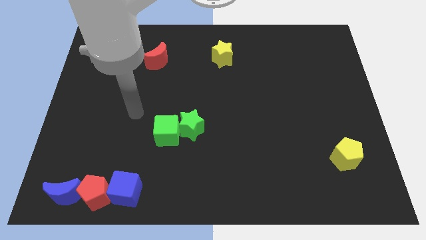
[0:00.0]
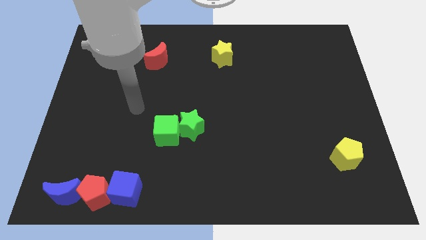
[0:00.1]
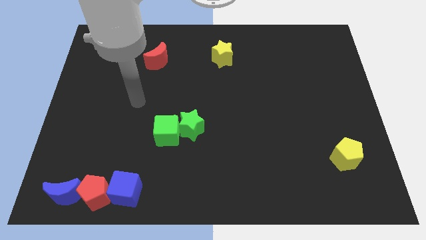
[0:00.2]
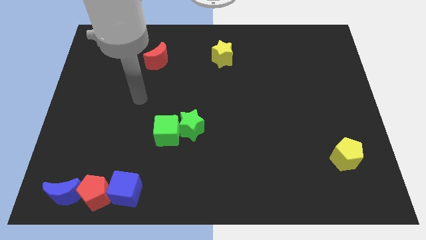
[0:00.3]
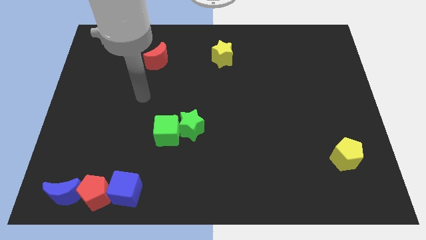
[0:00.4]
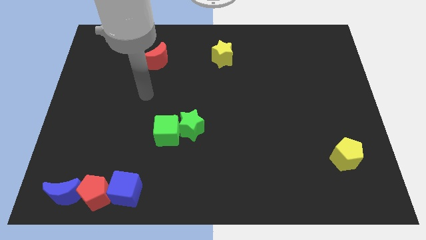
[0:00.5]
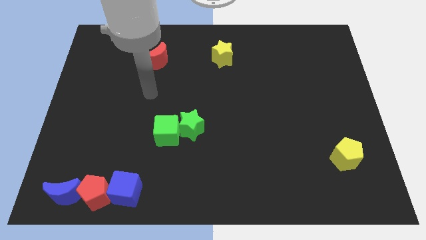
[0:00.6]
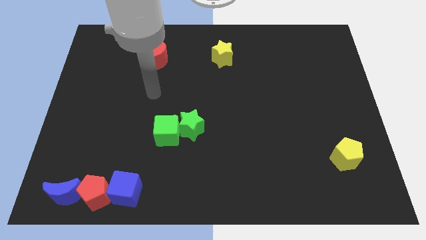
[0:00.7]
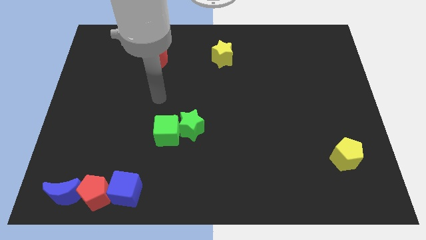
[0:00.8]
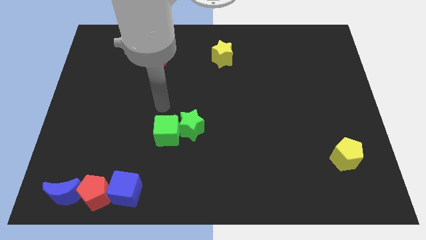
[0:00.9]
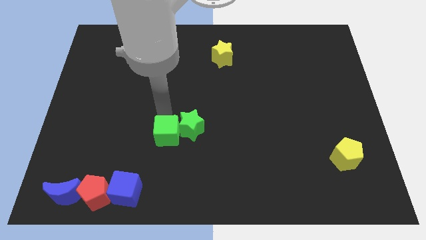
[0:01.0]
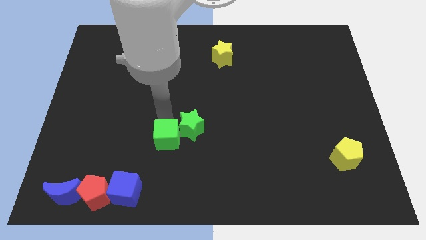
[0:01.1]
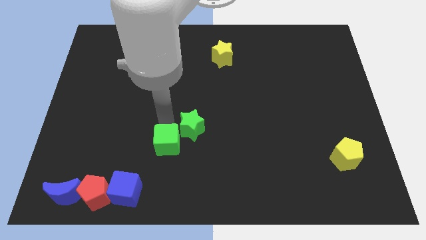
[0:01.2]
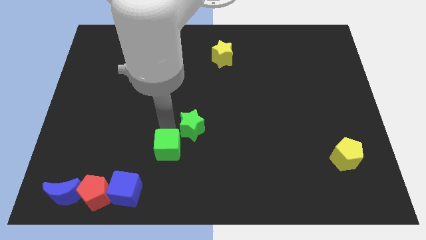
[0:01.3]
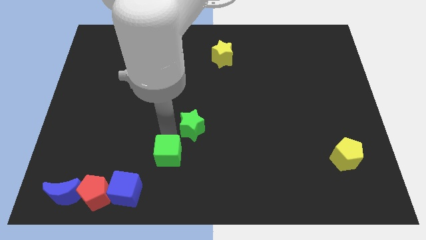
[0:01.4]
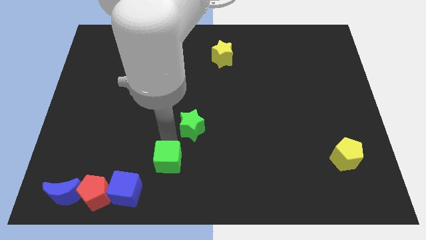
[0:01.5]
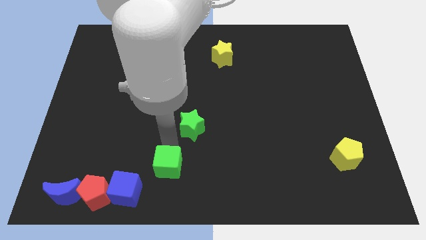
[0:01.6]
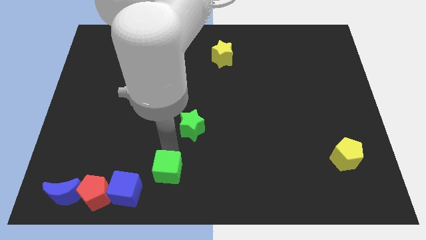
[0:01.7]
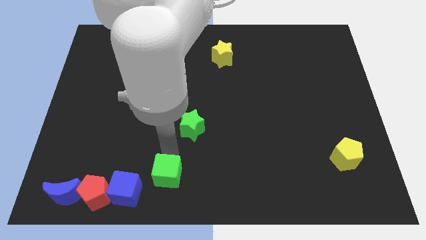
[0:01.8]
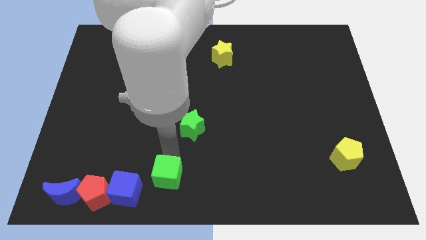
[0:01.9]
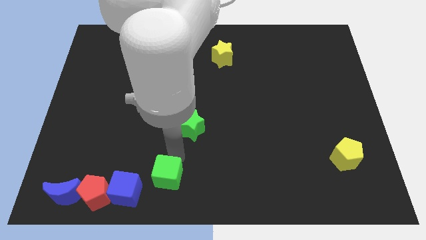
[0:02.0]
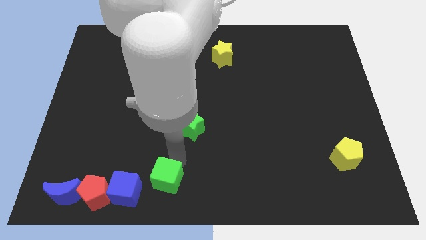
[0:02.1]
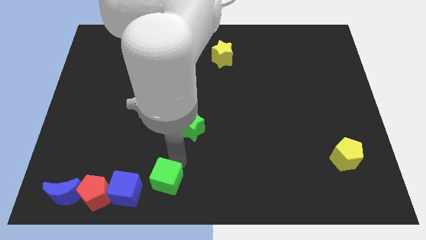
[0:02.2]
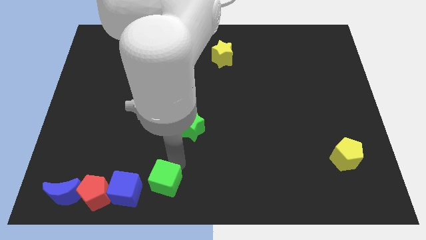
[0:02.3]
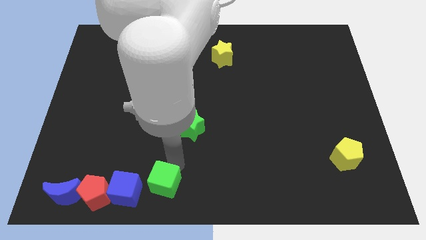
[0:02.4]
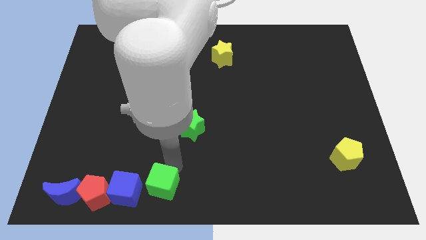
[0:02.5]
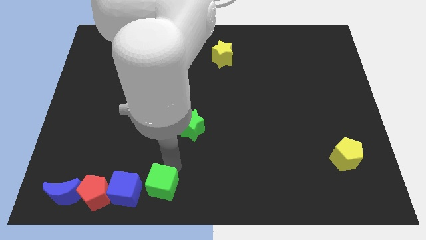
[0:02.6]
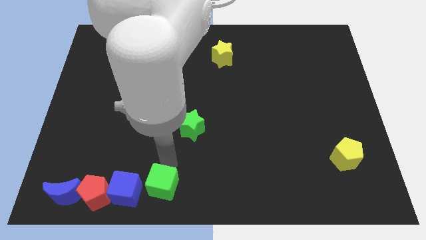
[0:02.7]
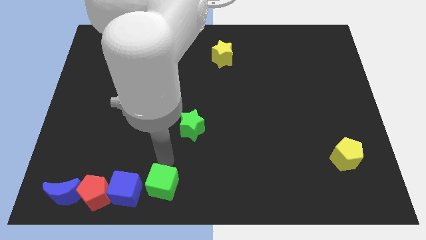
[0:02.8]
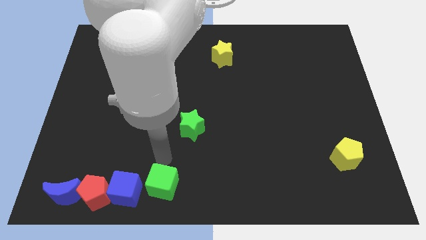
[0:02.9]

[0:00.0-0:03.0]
move the green cube to the right fo blue cube

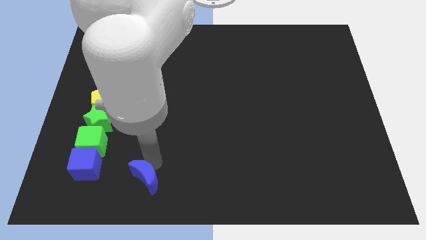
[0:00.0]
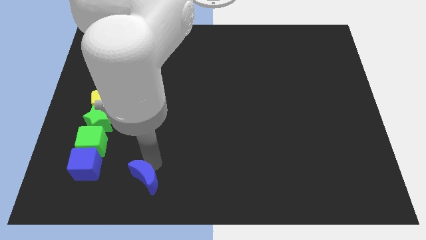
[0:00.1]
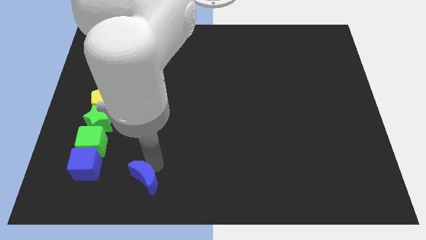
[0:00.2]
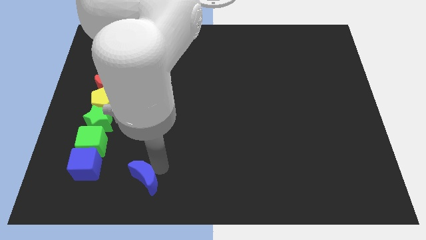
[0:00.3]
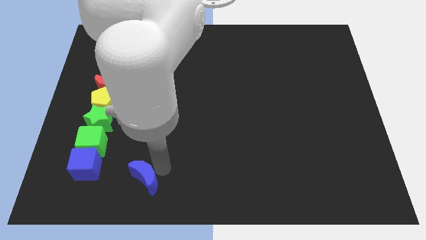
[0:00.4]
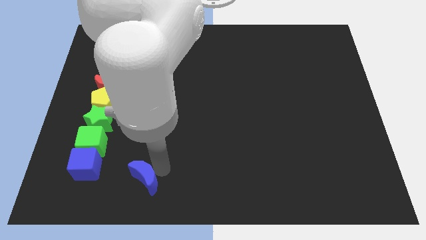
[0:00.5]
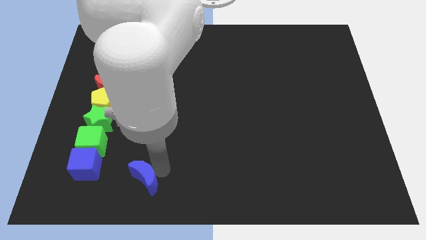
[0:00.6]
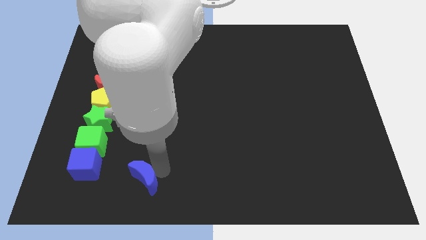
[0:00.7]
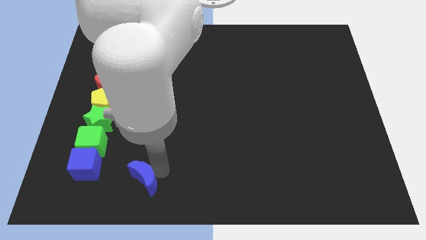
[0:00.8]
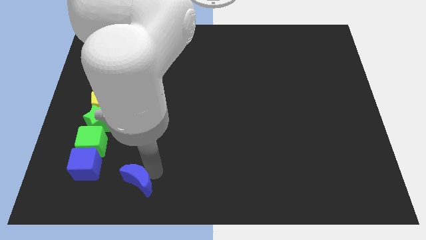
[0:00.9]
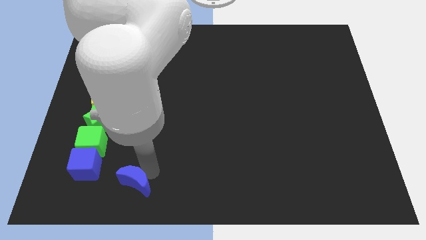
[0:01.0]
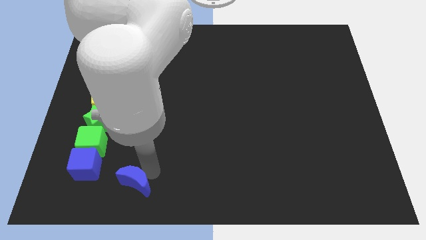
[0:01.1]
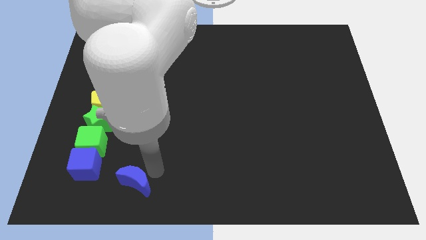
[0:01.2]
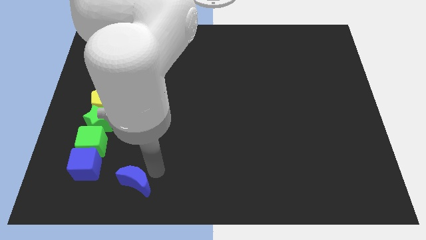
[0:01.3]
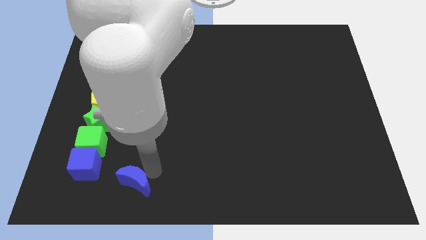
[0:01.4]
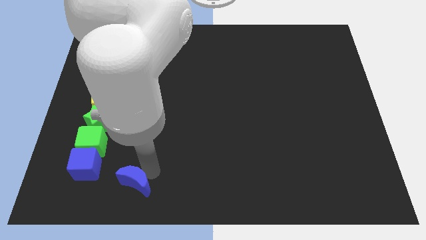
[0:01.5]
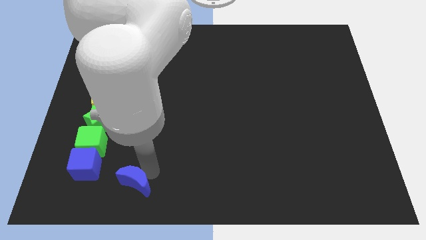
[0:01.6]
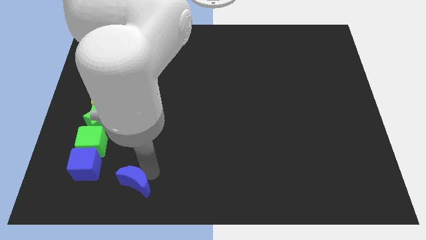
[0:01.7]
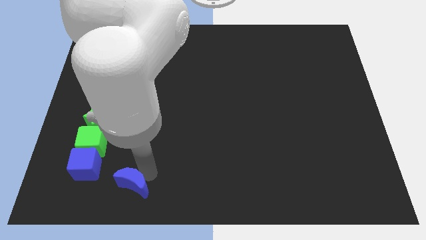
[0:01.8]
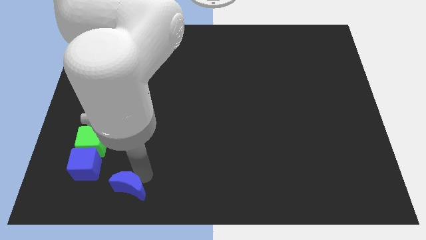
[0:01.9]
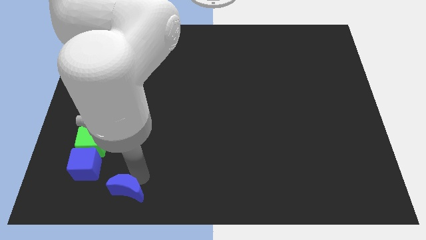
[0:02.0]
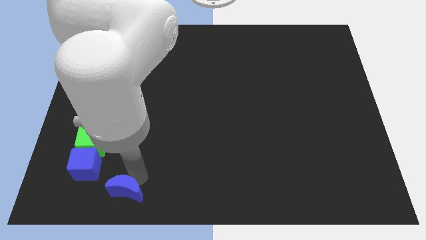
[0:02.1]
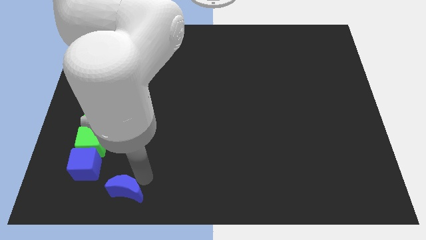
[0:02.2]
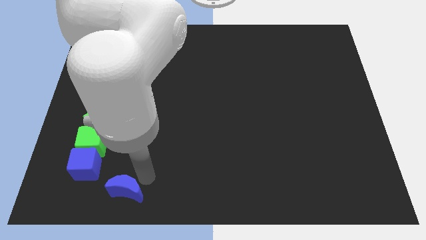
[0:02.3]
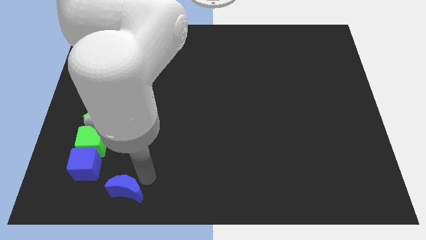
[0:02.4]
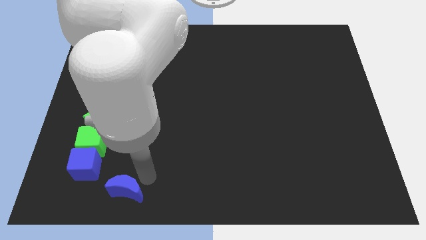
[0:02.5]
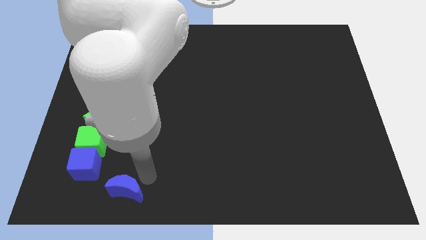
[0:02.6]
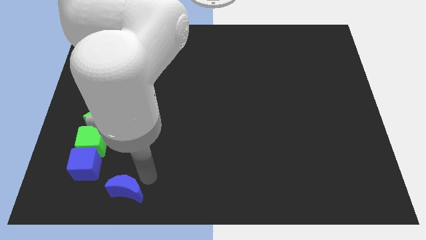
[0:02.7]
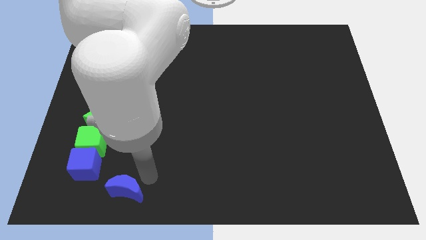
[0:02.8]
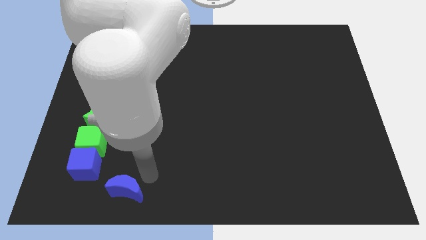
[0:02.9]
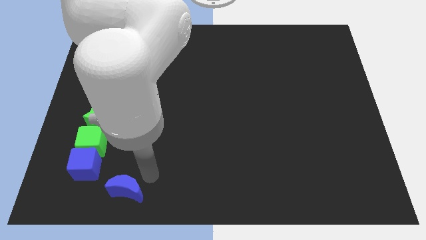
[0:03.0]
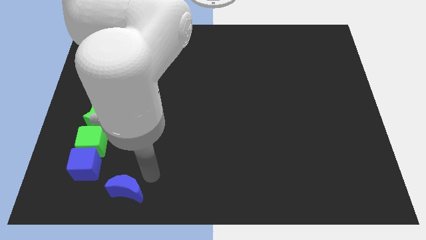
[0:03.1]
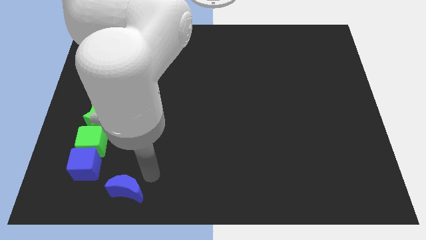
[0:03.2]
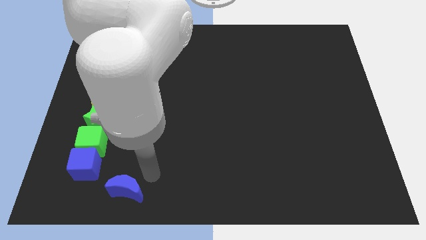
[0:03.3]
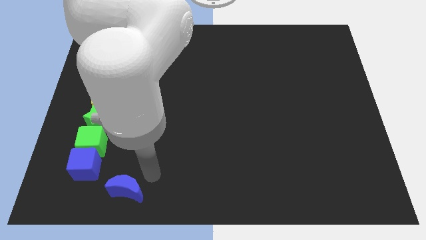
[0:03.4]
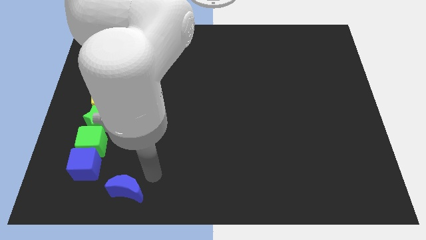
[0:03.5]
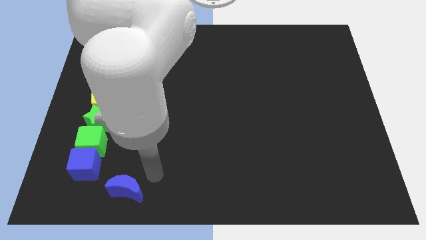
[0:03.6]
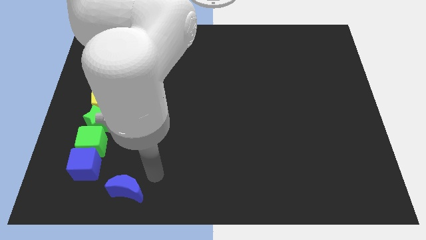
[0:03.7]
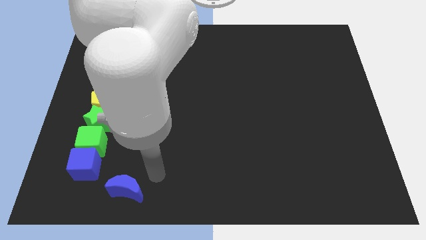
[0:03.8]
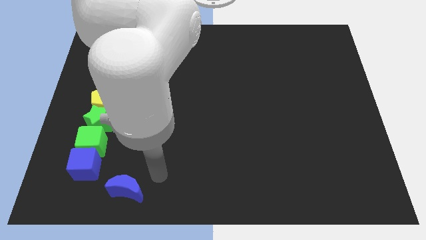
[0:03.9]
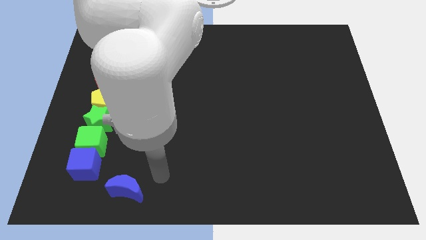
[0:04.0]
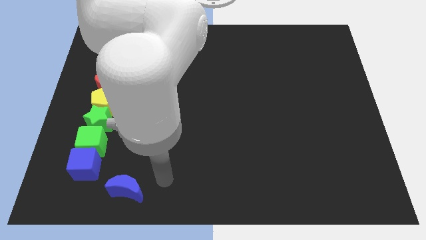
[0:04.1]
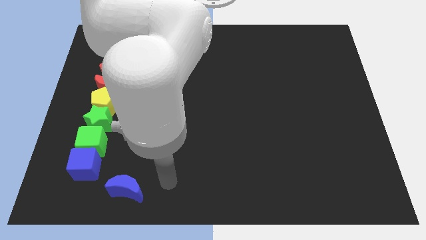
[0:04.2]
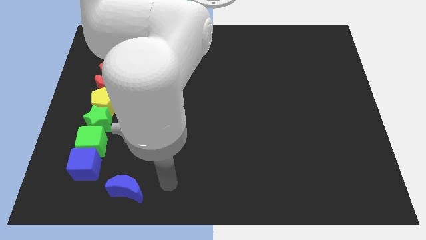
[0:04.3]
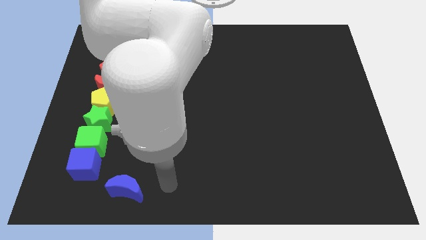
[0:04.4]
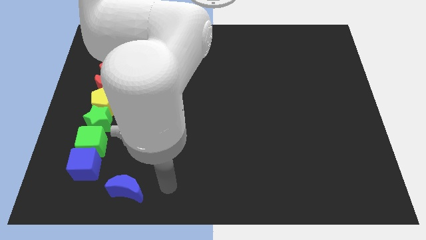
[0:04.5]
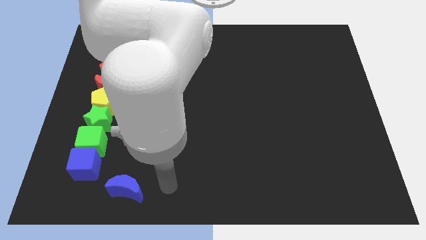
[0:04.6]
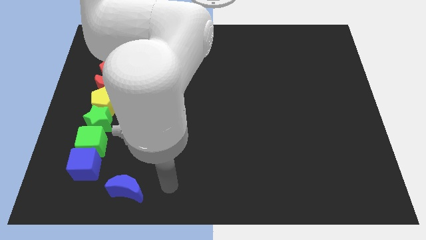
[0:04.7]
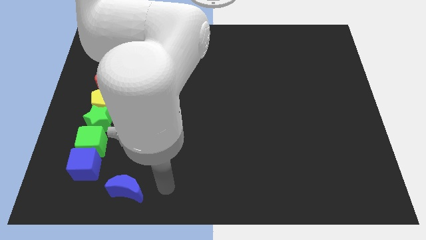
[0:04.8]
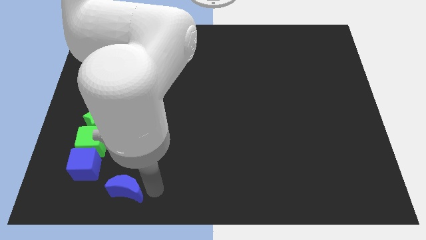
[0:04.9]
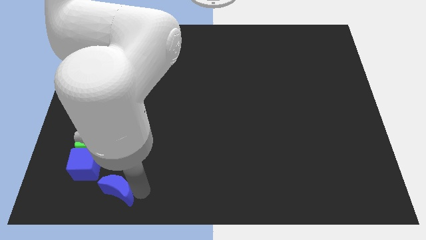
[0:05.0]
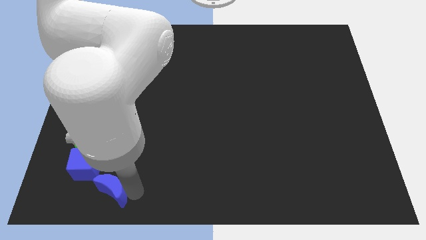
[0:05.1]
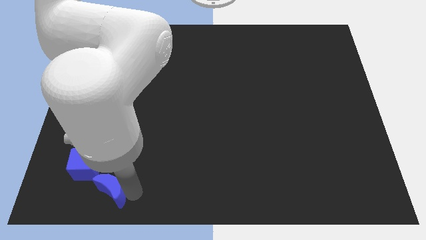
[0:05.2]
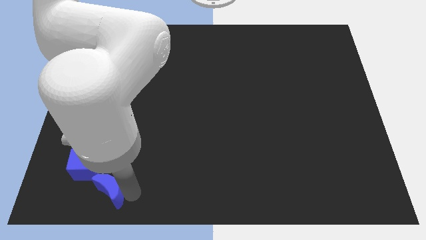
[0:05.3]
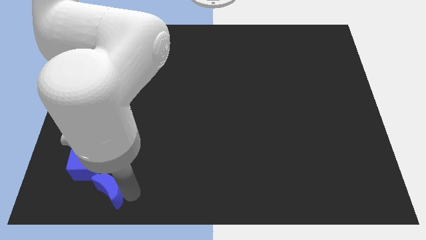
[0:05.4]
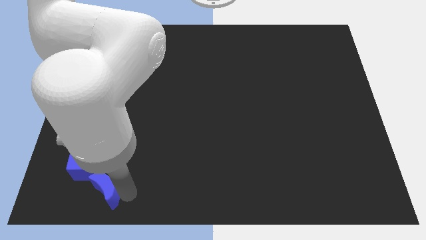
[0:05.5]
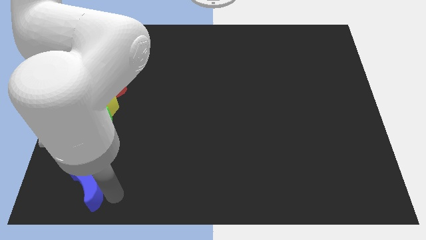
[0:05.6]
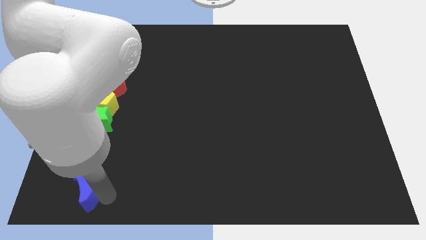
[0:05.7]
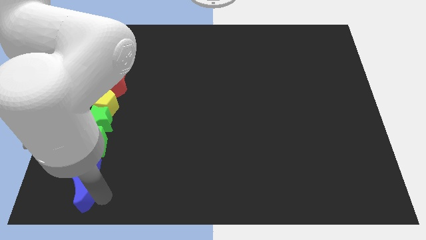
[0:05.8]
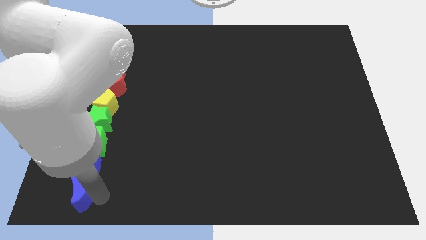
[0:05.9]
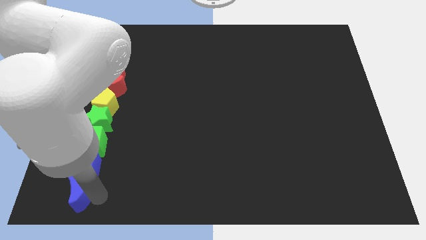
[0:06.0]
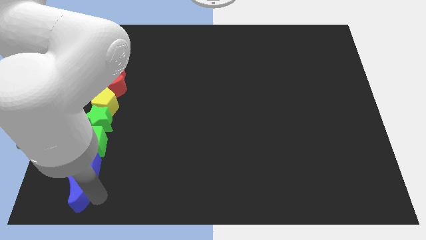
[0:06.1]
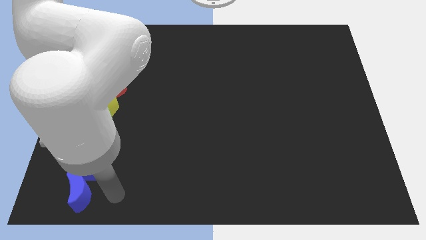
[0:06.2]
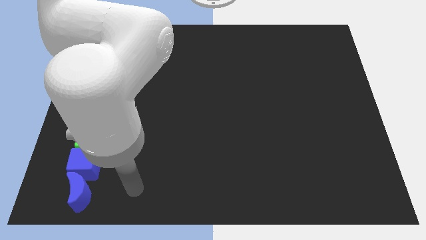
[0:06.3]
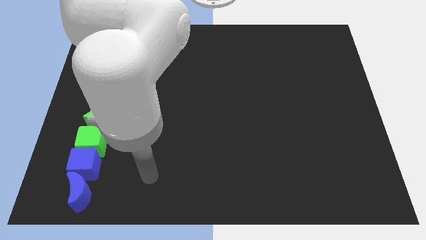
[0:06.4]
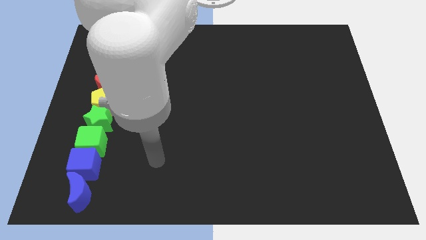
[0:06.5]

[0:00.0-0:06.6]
place the blue moon below the blue cube
